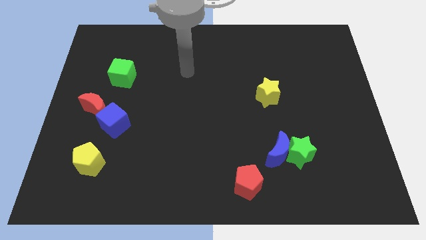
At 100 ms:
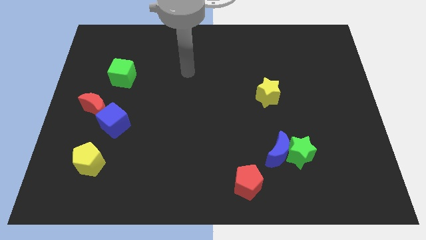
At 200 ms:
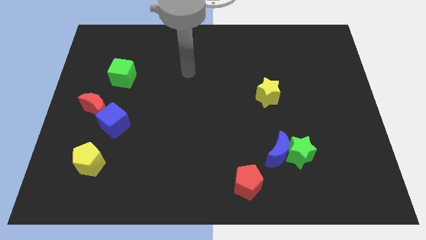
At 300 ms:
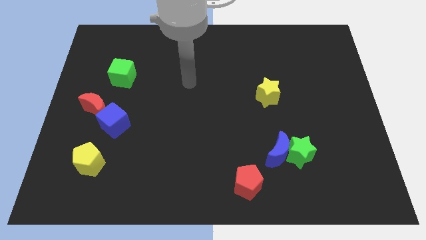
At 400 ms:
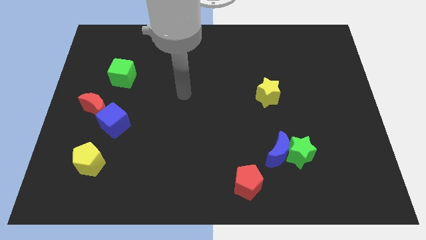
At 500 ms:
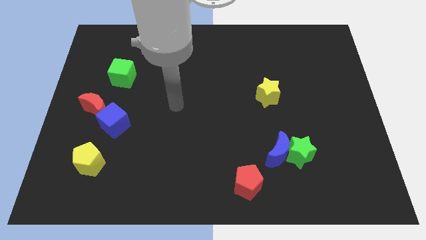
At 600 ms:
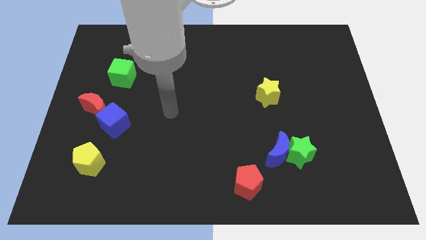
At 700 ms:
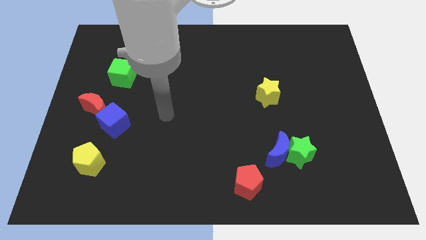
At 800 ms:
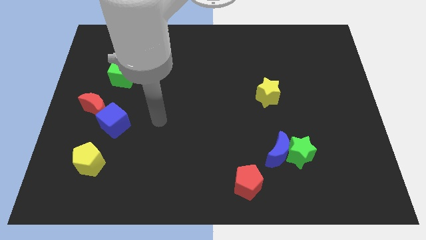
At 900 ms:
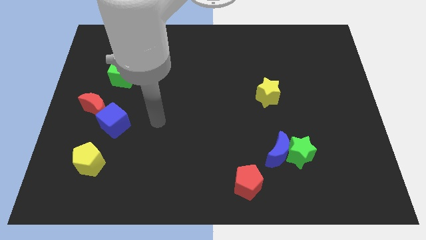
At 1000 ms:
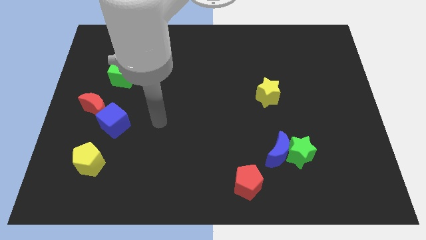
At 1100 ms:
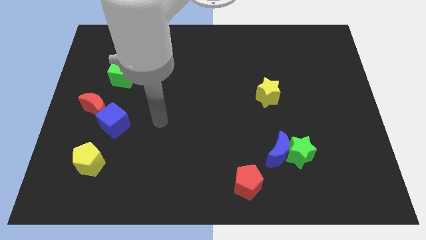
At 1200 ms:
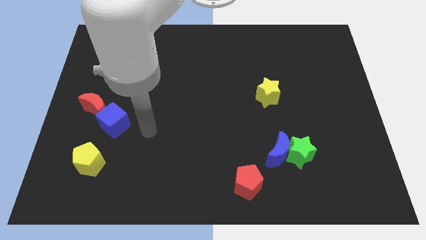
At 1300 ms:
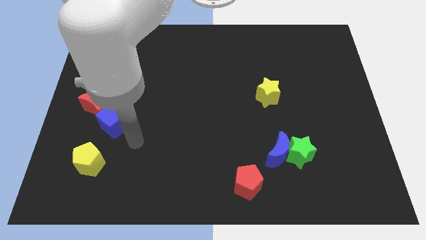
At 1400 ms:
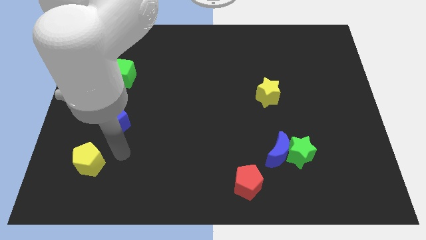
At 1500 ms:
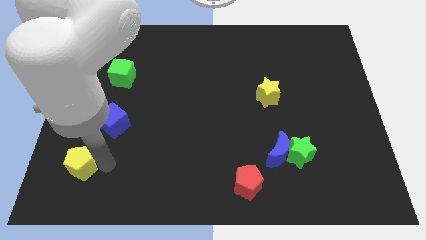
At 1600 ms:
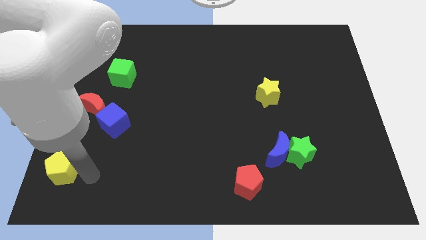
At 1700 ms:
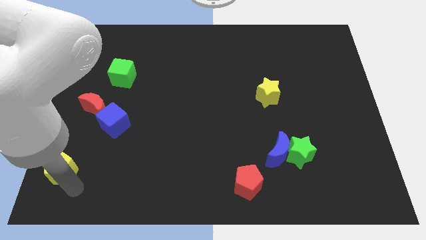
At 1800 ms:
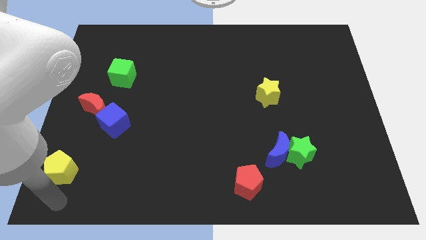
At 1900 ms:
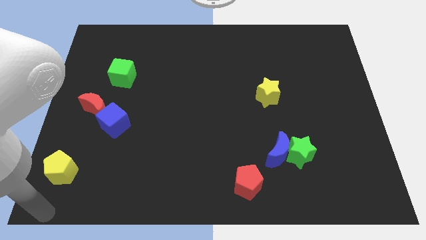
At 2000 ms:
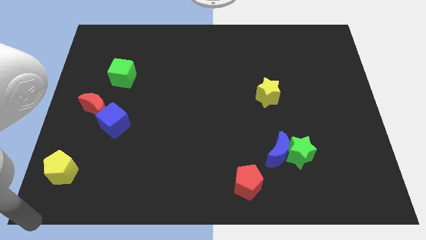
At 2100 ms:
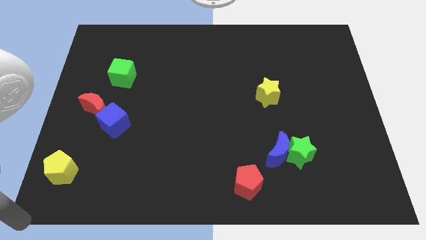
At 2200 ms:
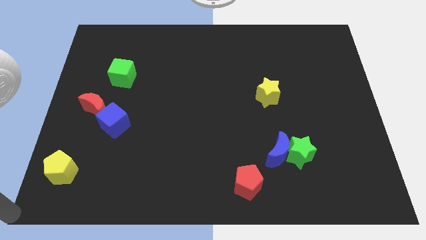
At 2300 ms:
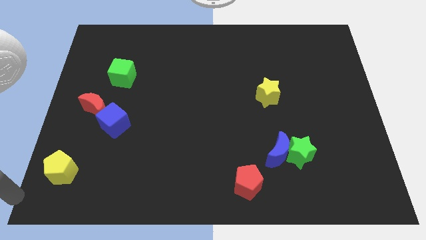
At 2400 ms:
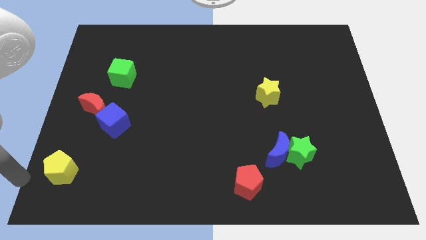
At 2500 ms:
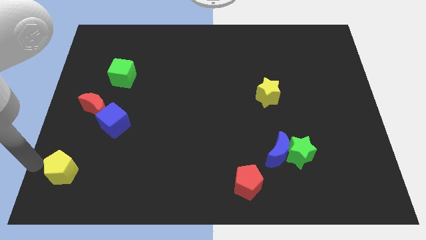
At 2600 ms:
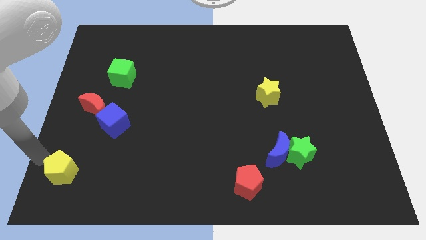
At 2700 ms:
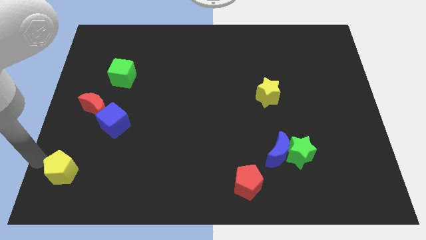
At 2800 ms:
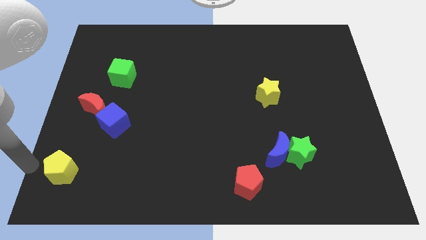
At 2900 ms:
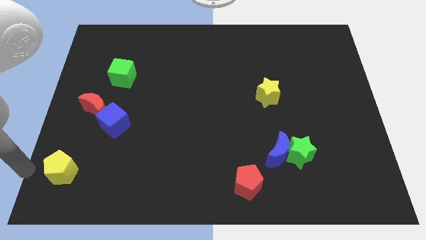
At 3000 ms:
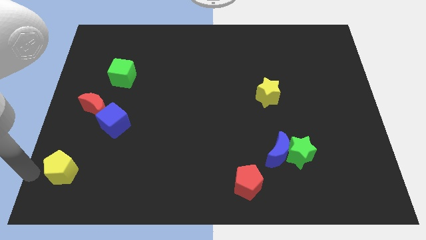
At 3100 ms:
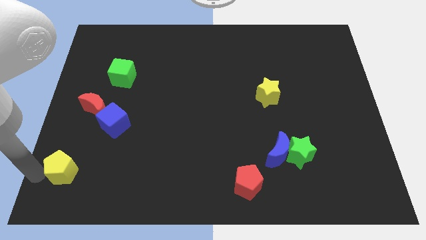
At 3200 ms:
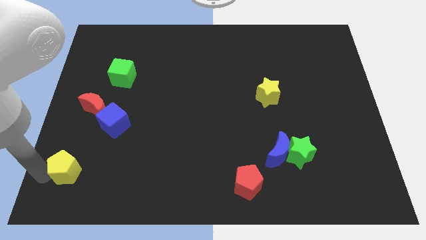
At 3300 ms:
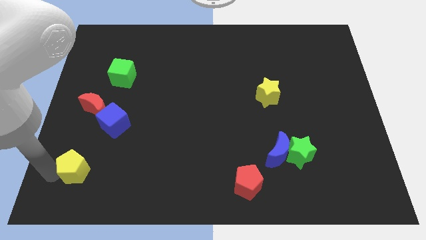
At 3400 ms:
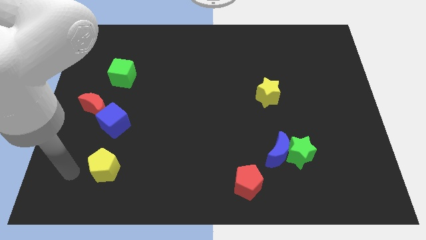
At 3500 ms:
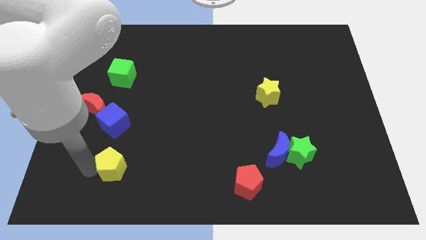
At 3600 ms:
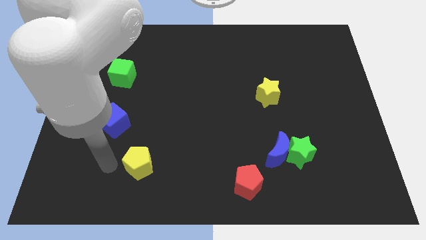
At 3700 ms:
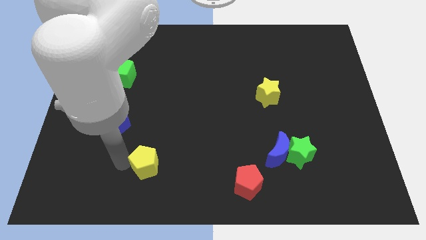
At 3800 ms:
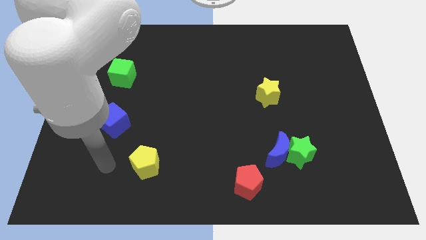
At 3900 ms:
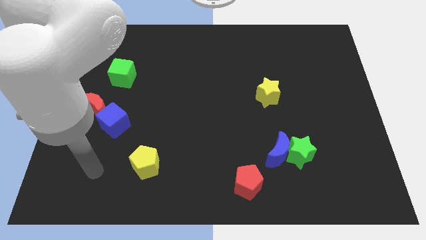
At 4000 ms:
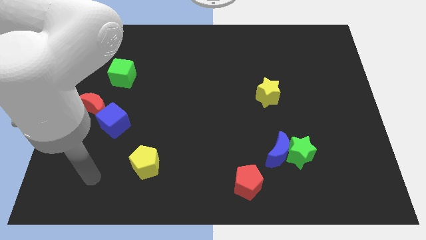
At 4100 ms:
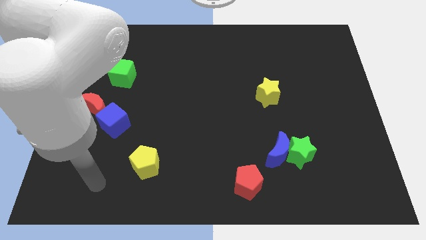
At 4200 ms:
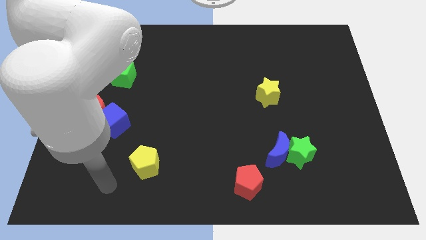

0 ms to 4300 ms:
push the yellow pentagon

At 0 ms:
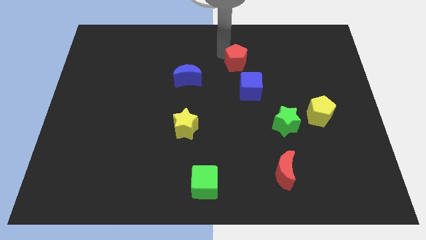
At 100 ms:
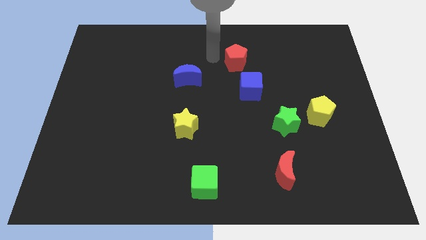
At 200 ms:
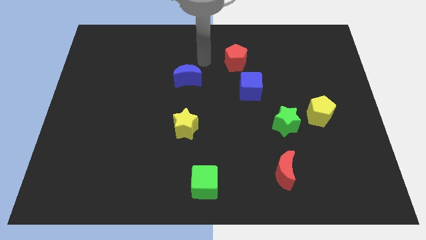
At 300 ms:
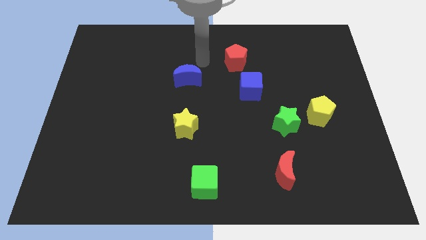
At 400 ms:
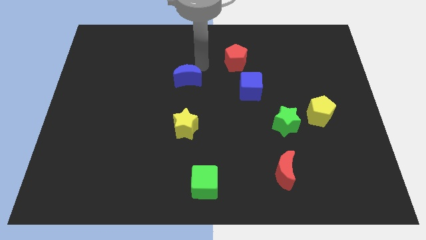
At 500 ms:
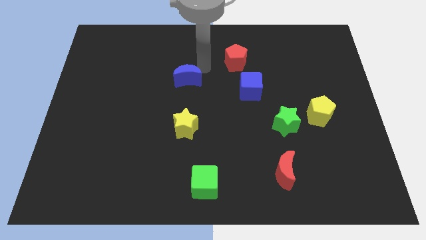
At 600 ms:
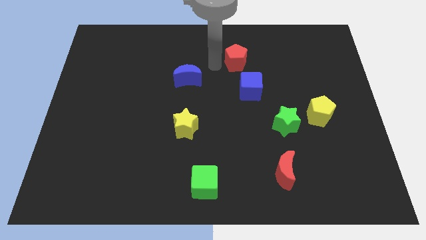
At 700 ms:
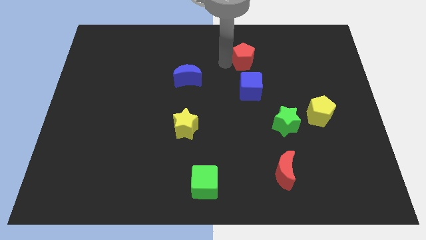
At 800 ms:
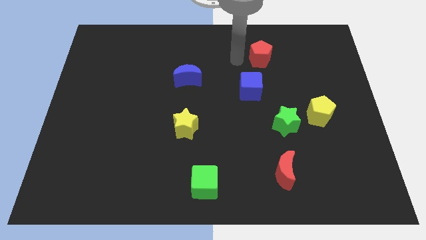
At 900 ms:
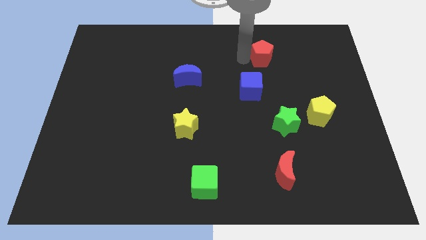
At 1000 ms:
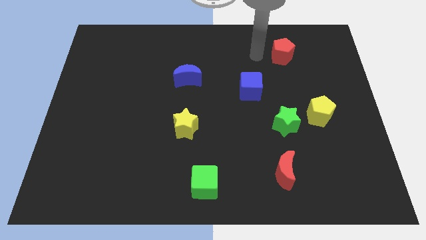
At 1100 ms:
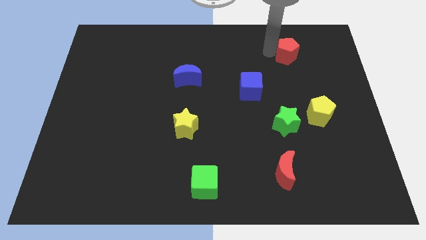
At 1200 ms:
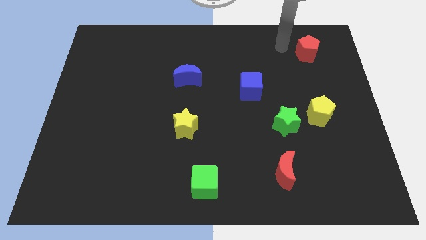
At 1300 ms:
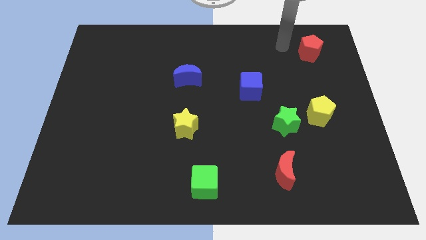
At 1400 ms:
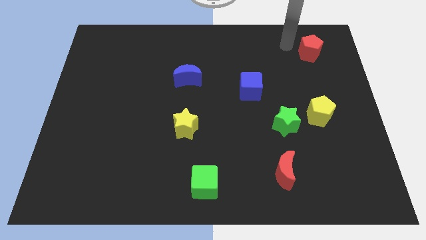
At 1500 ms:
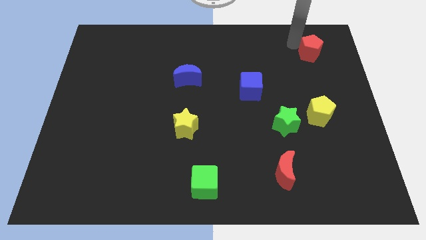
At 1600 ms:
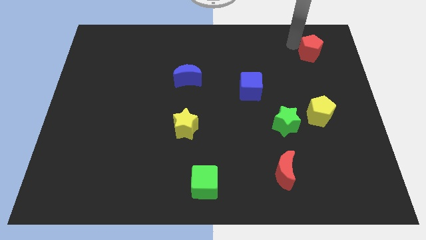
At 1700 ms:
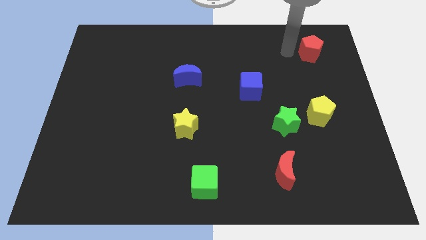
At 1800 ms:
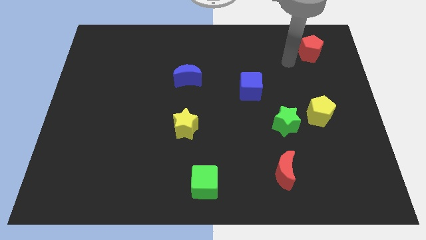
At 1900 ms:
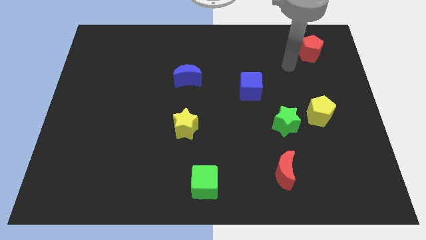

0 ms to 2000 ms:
move the red pentagon to the right

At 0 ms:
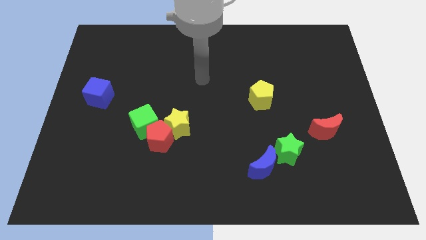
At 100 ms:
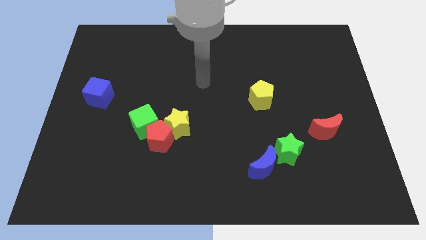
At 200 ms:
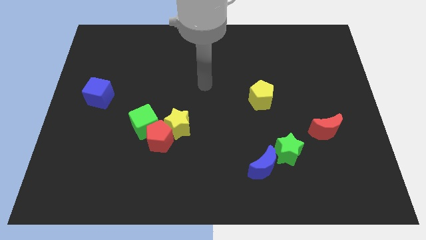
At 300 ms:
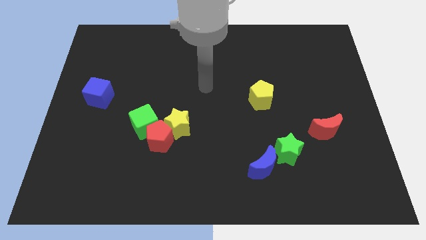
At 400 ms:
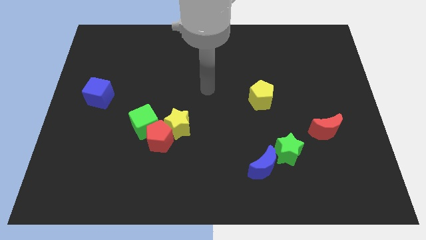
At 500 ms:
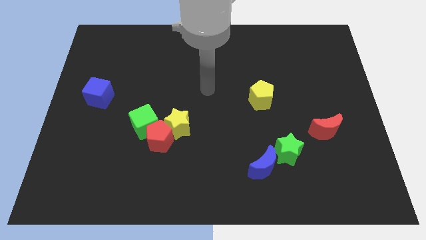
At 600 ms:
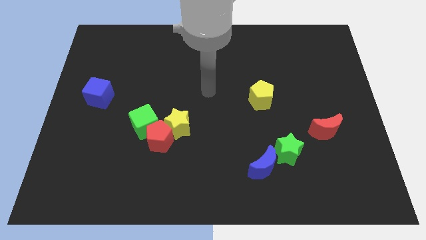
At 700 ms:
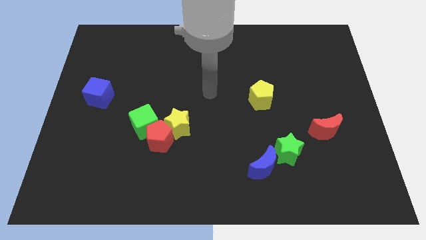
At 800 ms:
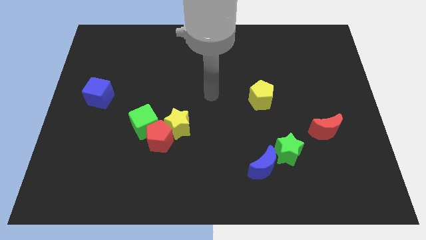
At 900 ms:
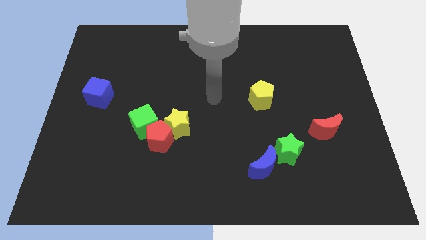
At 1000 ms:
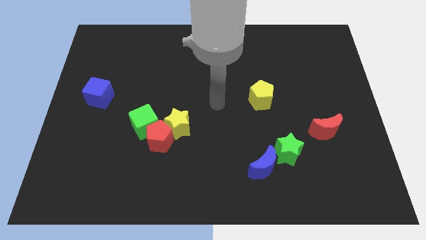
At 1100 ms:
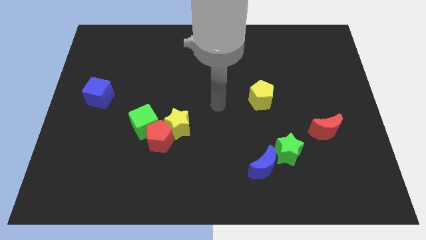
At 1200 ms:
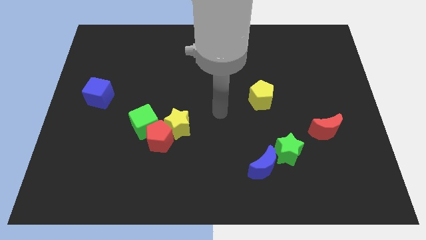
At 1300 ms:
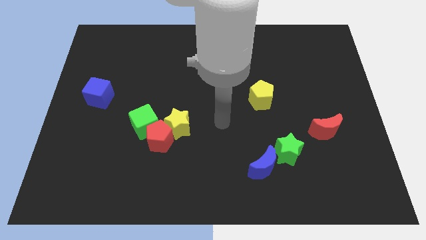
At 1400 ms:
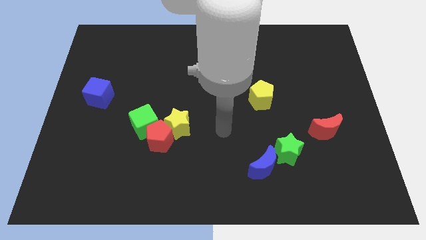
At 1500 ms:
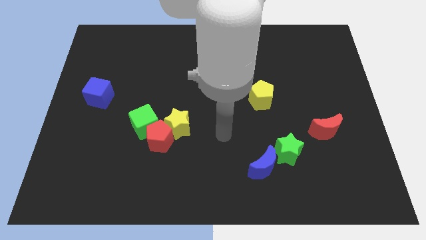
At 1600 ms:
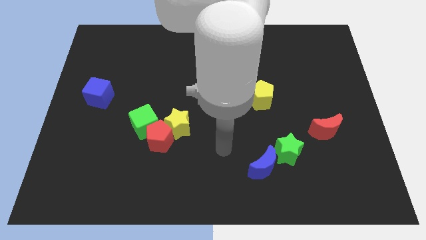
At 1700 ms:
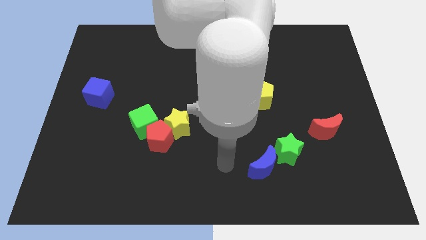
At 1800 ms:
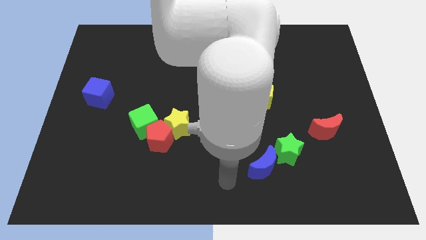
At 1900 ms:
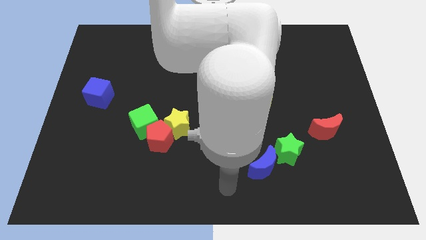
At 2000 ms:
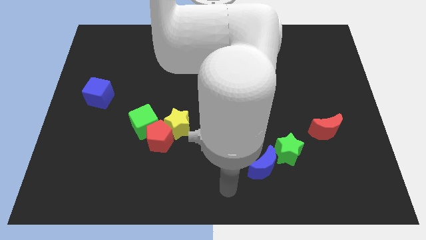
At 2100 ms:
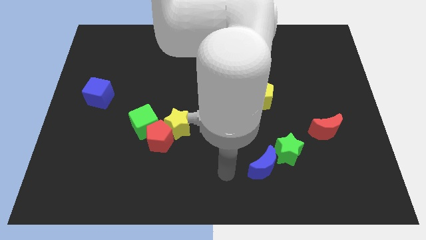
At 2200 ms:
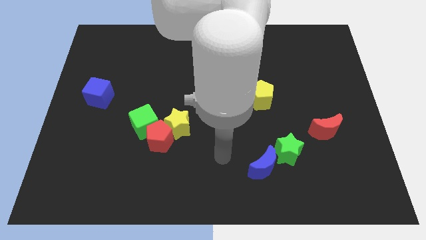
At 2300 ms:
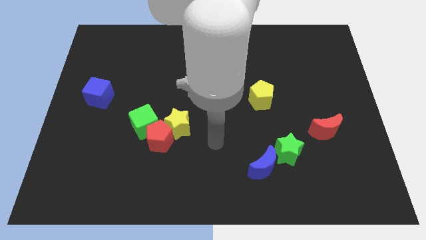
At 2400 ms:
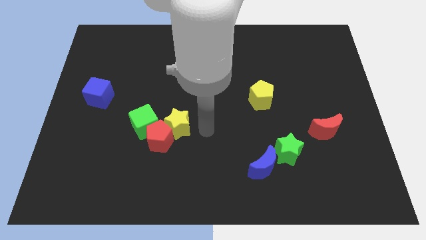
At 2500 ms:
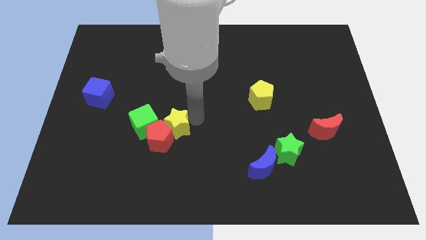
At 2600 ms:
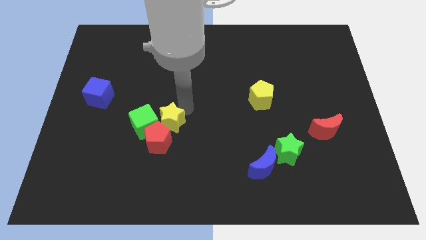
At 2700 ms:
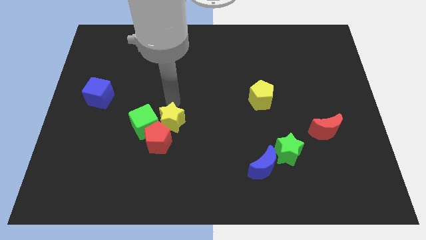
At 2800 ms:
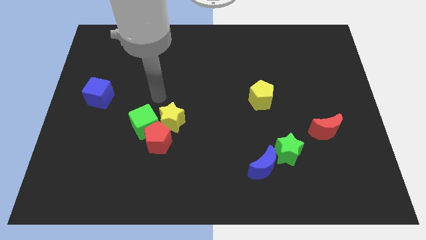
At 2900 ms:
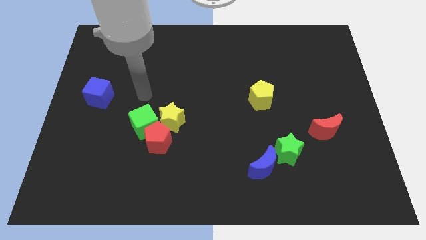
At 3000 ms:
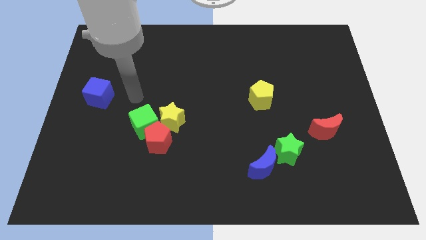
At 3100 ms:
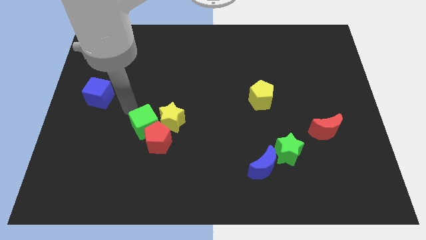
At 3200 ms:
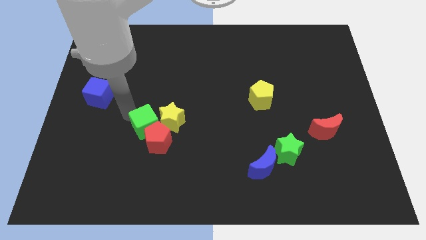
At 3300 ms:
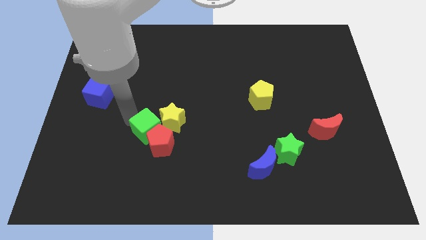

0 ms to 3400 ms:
move the arm to the green cube
